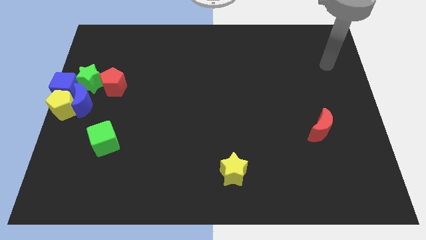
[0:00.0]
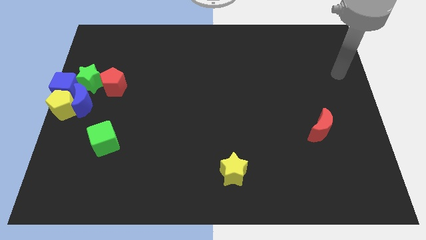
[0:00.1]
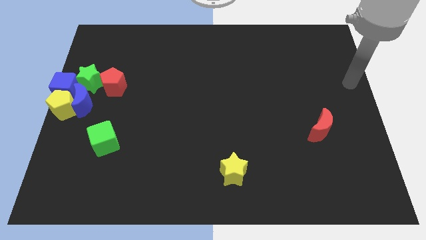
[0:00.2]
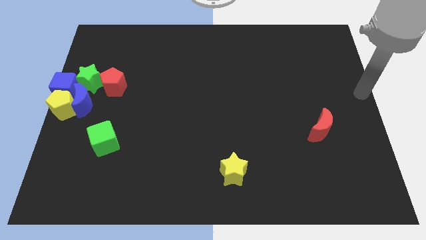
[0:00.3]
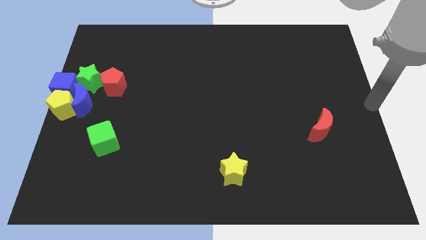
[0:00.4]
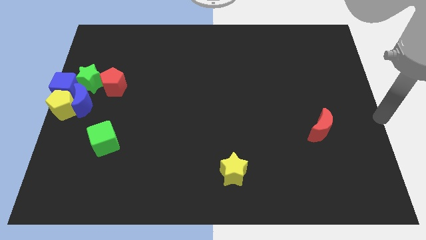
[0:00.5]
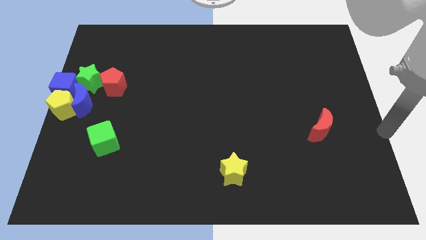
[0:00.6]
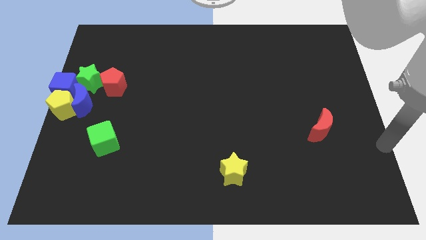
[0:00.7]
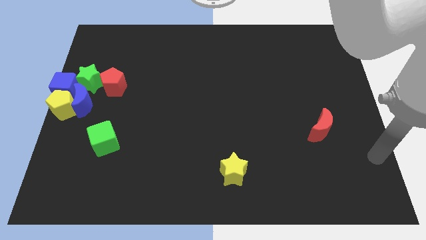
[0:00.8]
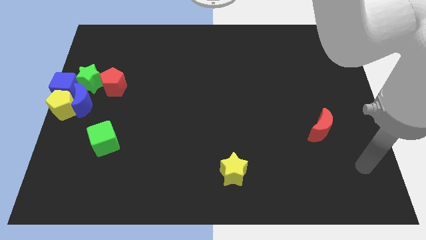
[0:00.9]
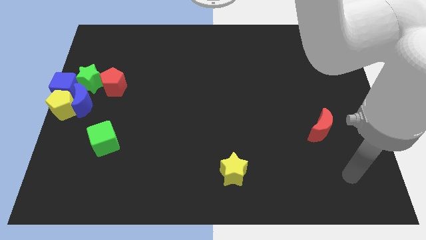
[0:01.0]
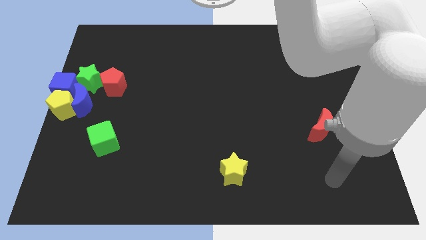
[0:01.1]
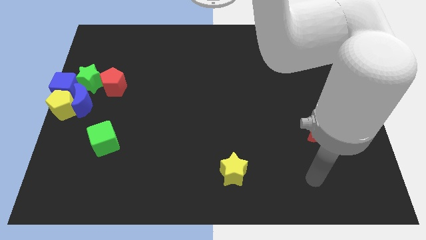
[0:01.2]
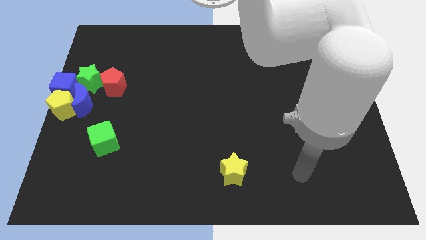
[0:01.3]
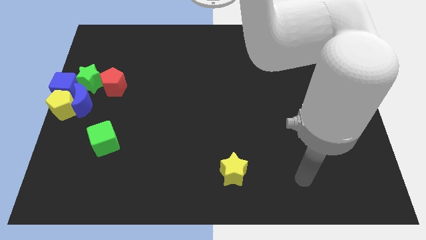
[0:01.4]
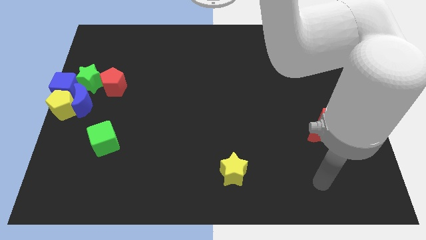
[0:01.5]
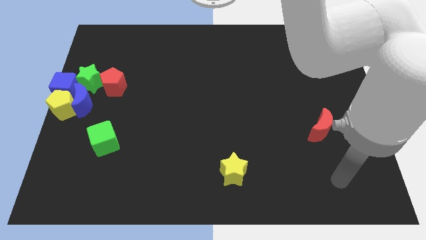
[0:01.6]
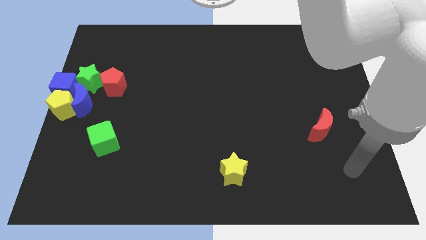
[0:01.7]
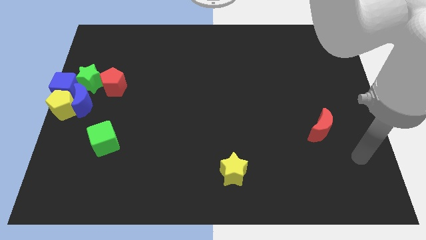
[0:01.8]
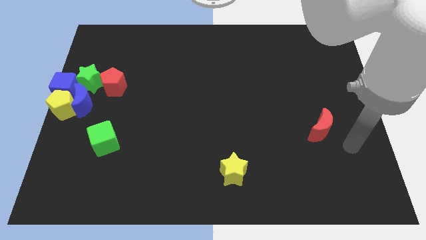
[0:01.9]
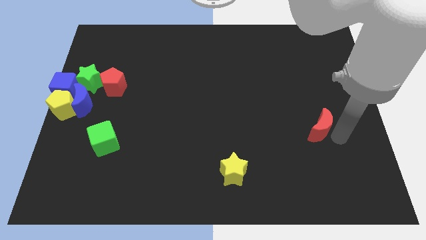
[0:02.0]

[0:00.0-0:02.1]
move your arm towards the red crescent

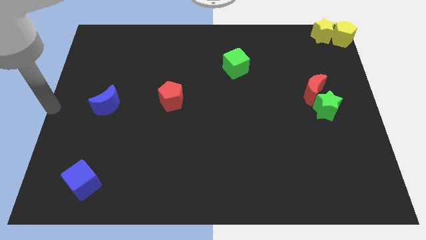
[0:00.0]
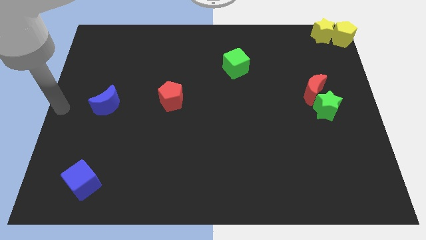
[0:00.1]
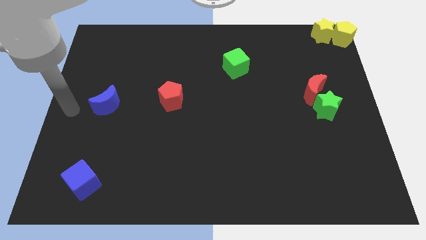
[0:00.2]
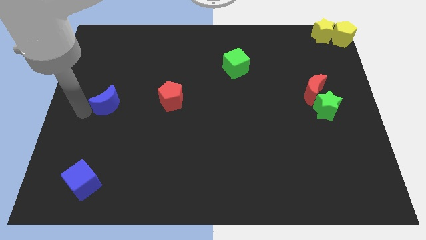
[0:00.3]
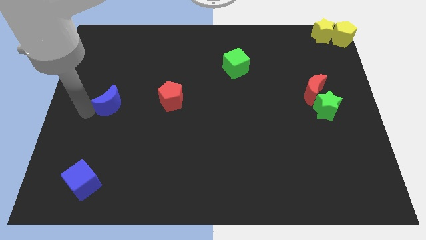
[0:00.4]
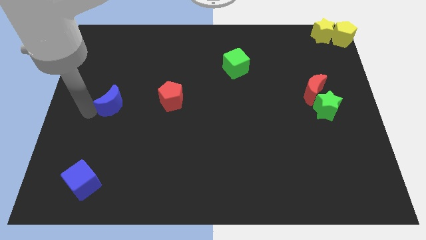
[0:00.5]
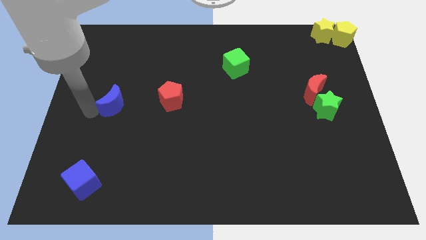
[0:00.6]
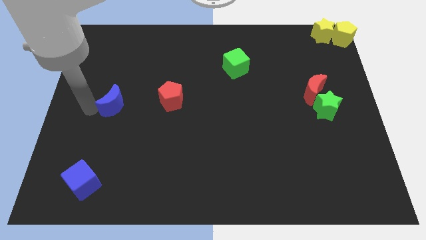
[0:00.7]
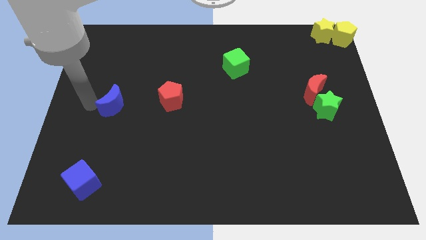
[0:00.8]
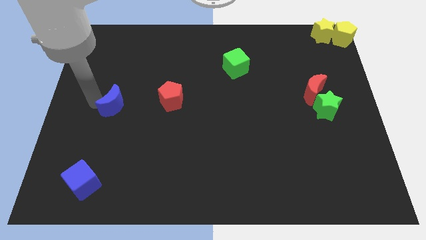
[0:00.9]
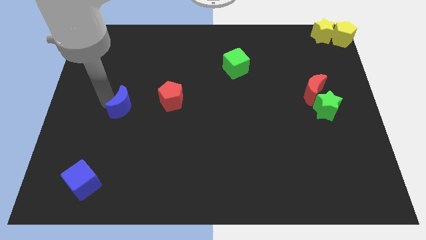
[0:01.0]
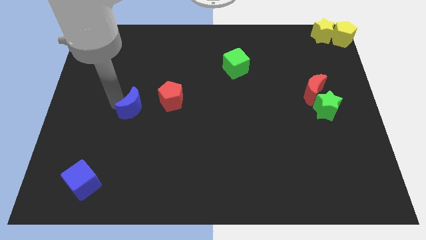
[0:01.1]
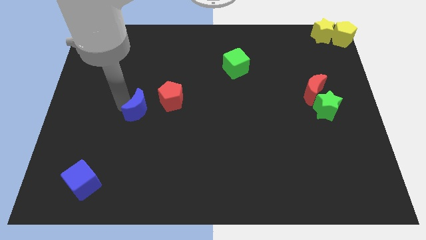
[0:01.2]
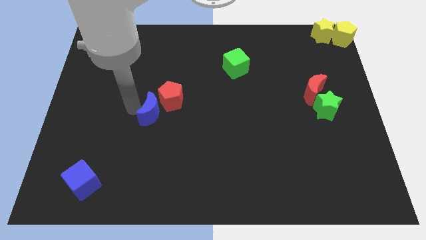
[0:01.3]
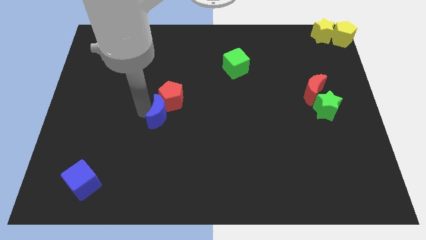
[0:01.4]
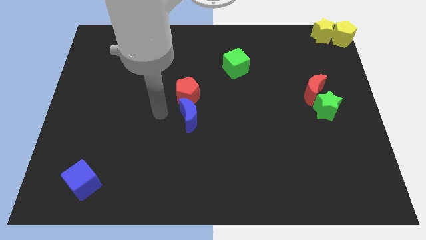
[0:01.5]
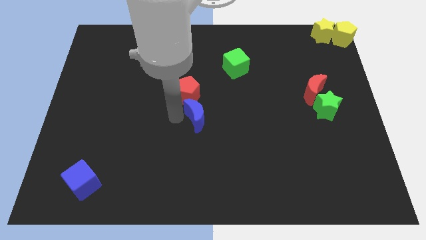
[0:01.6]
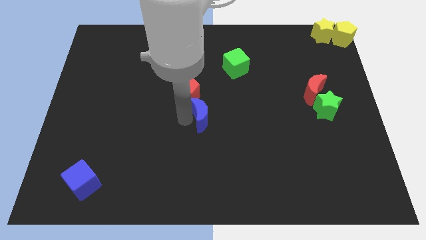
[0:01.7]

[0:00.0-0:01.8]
move the blue moon to the bottom side of the red pentagon

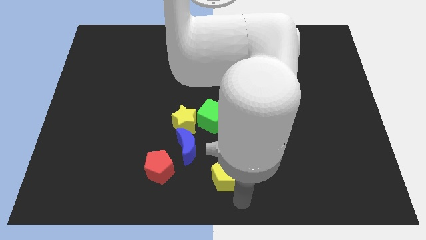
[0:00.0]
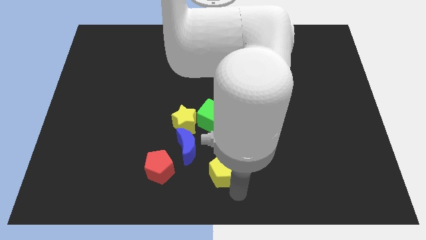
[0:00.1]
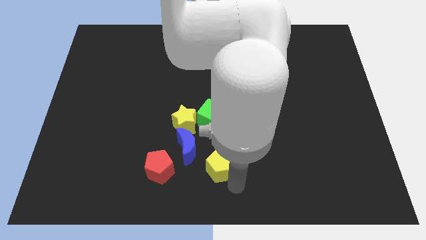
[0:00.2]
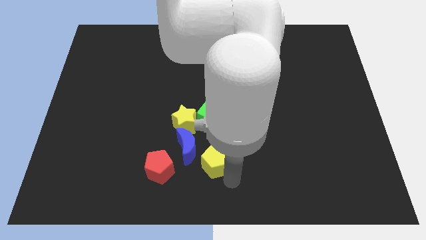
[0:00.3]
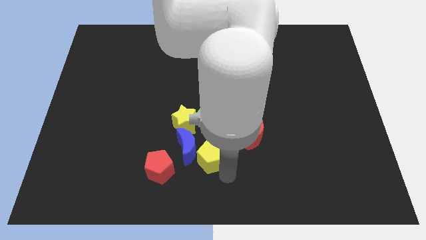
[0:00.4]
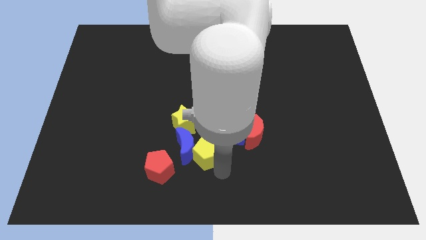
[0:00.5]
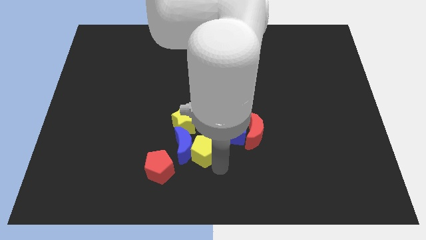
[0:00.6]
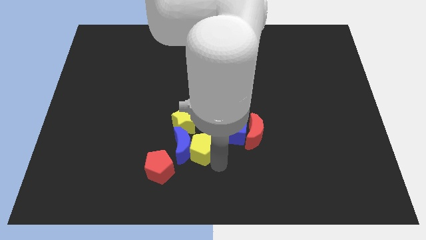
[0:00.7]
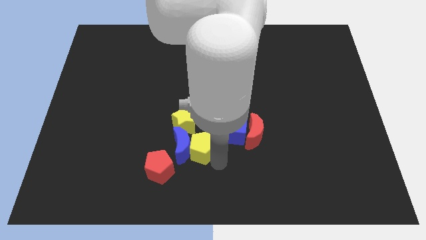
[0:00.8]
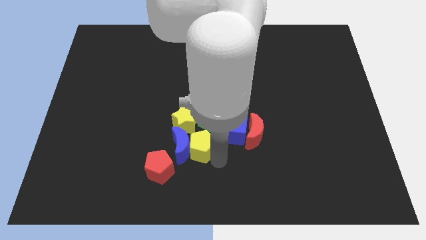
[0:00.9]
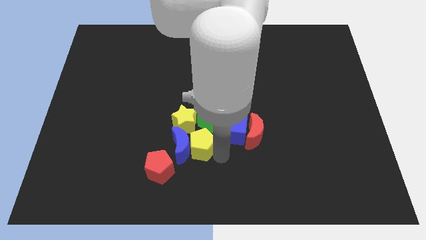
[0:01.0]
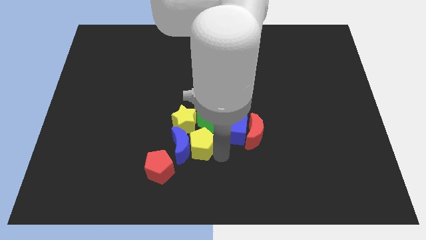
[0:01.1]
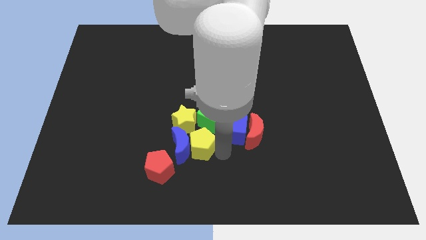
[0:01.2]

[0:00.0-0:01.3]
place the yellow pentagon right to the blue moon

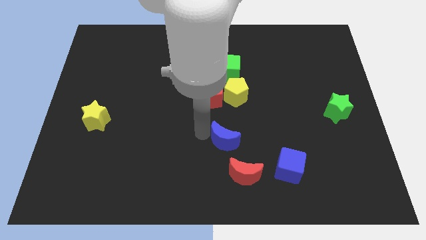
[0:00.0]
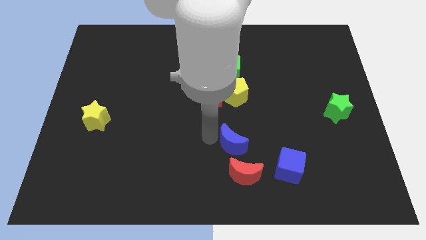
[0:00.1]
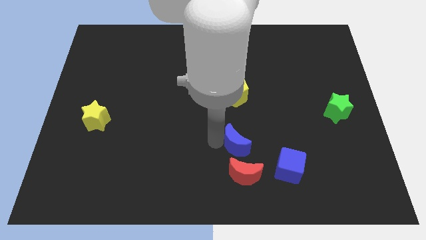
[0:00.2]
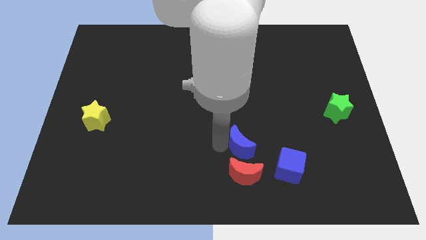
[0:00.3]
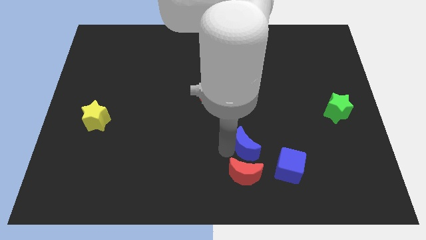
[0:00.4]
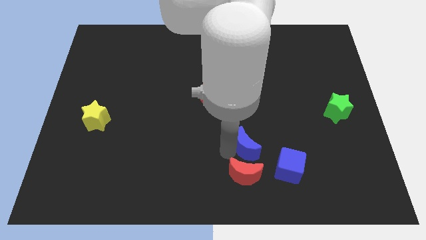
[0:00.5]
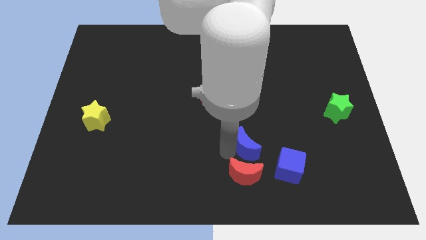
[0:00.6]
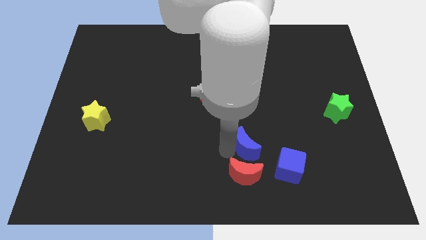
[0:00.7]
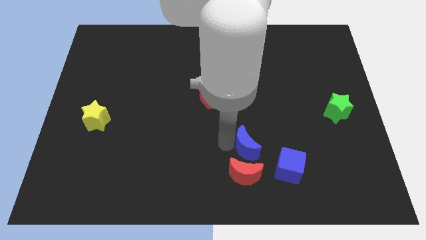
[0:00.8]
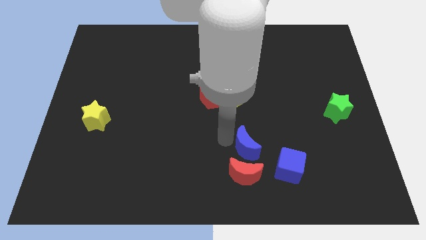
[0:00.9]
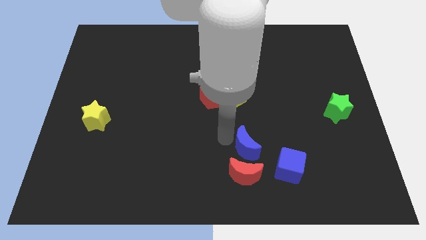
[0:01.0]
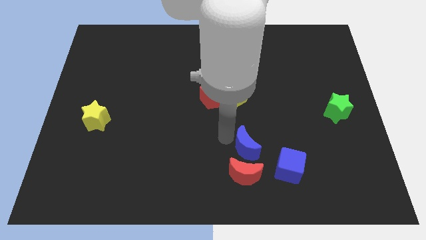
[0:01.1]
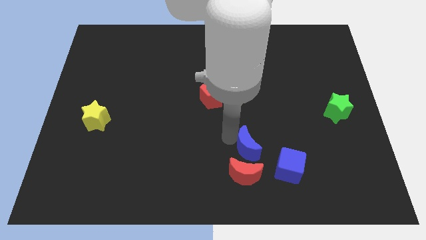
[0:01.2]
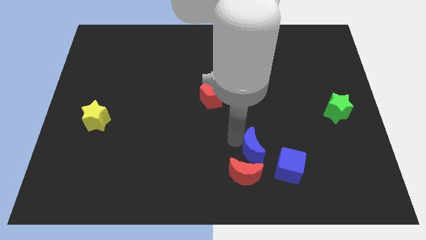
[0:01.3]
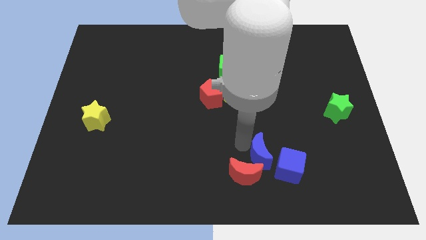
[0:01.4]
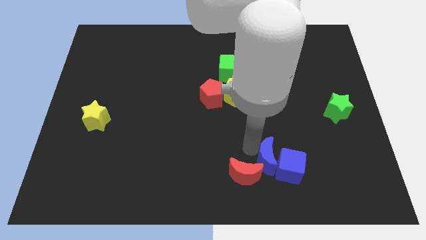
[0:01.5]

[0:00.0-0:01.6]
move the blue crescent to the top right of the red crescent

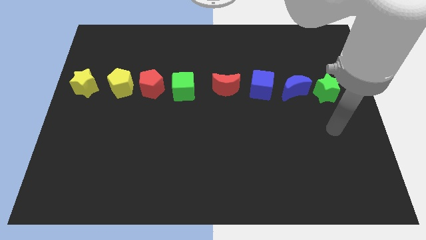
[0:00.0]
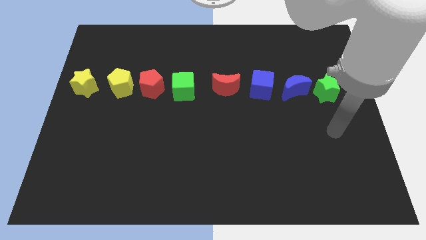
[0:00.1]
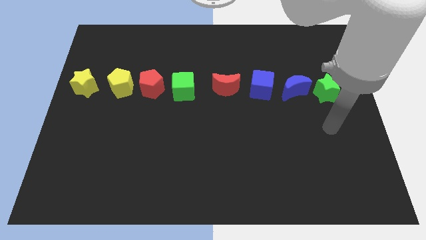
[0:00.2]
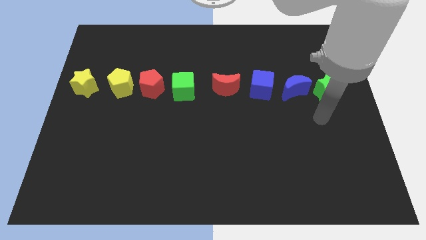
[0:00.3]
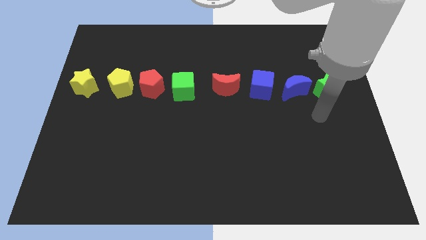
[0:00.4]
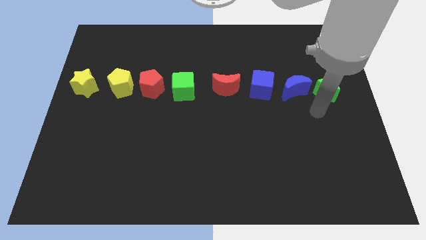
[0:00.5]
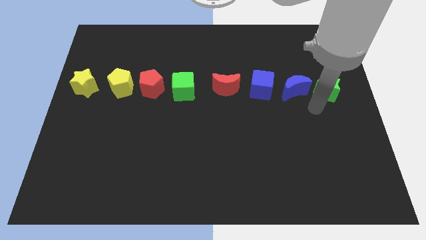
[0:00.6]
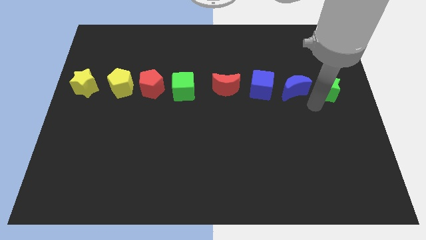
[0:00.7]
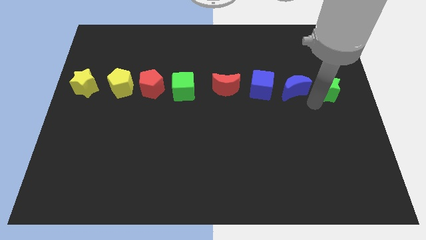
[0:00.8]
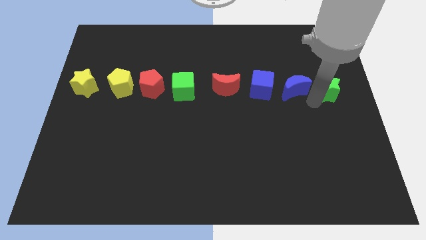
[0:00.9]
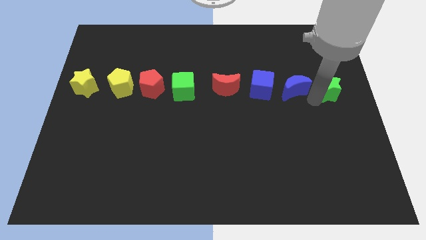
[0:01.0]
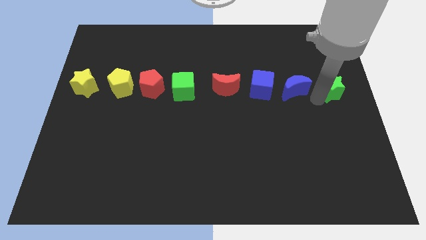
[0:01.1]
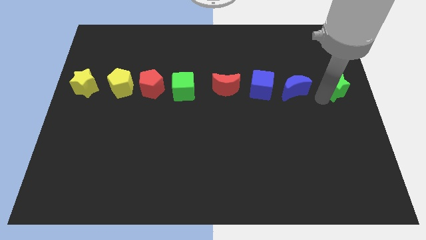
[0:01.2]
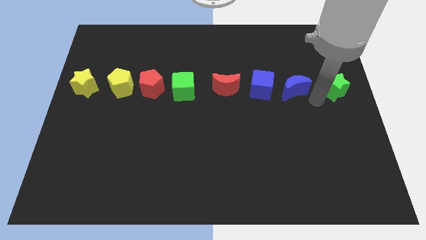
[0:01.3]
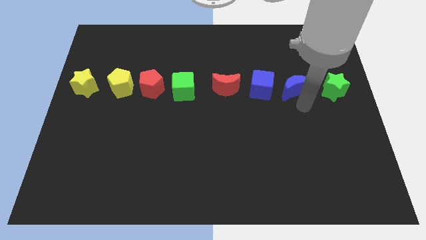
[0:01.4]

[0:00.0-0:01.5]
adjust the green star to form a horizontal line with a group of blocks

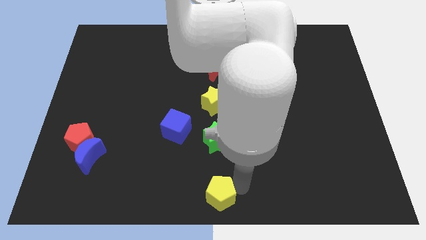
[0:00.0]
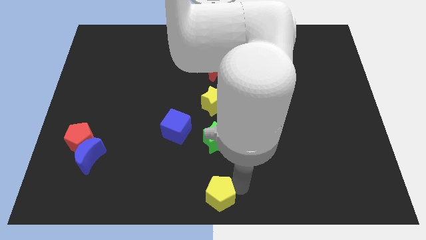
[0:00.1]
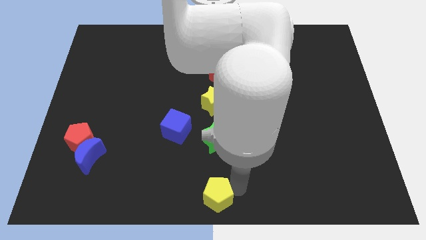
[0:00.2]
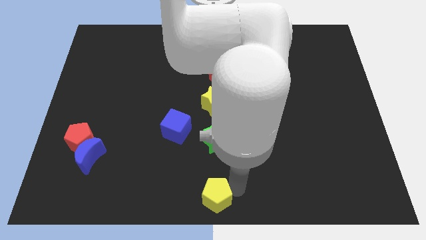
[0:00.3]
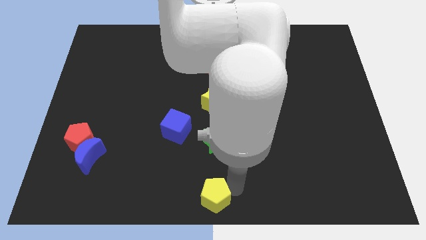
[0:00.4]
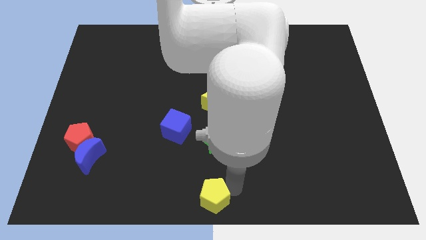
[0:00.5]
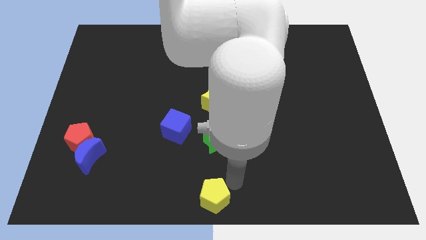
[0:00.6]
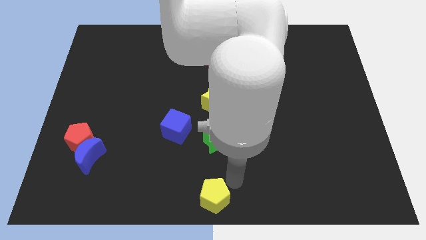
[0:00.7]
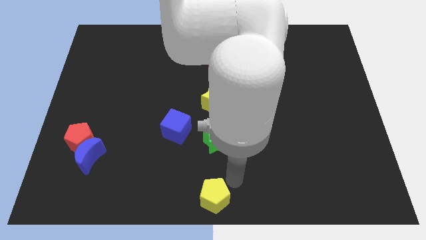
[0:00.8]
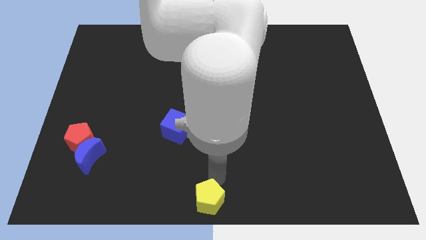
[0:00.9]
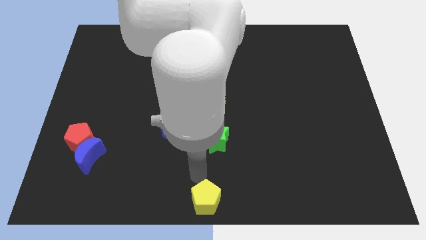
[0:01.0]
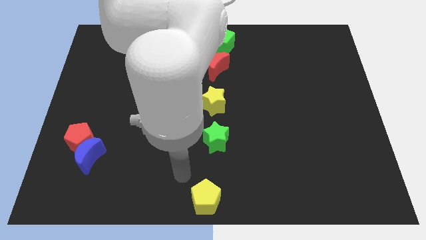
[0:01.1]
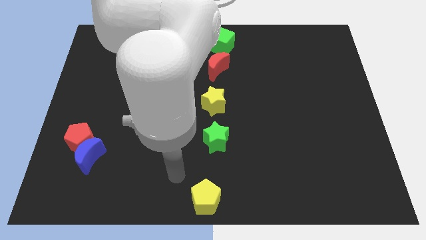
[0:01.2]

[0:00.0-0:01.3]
adjust the yellow pentagon at the bottom center of the board
